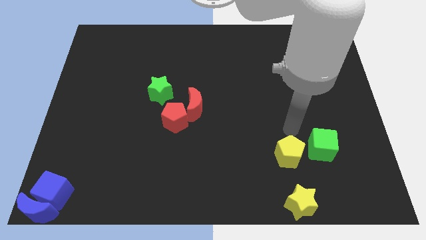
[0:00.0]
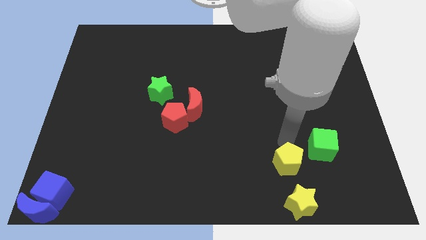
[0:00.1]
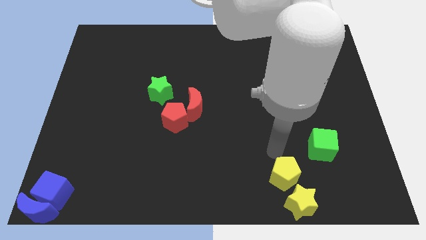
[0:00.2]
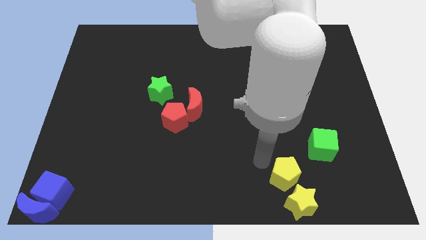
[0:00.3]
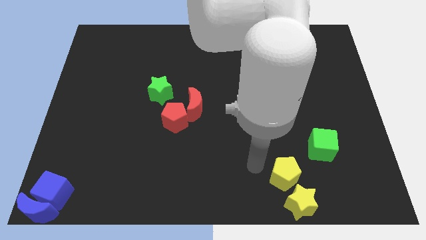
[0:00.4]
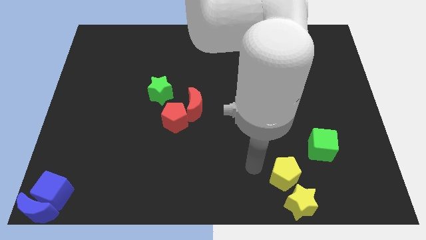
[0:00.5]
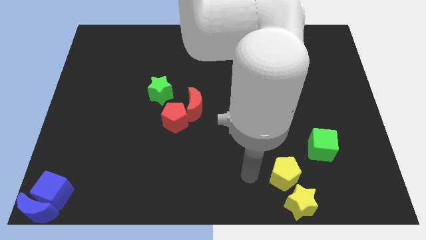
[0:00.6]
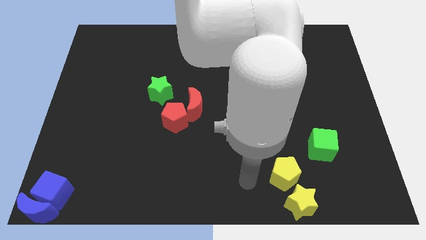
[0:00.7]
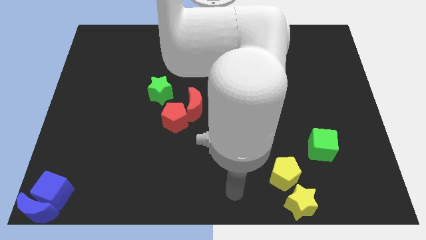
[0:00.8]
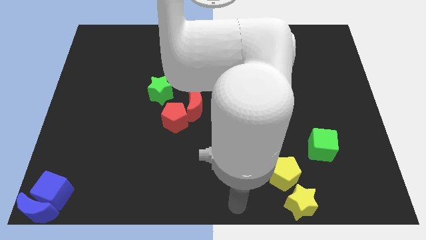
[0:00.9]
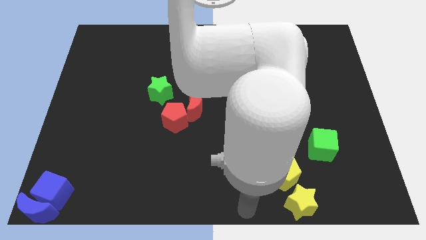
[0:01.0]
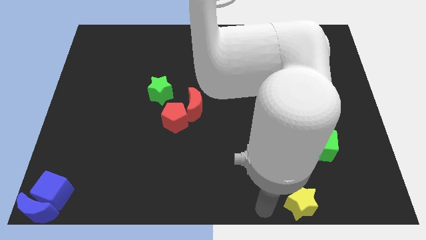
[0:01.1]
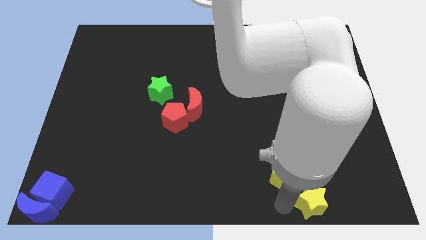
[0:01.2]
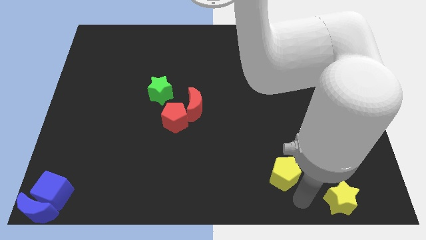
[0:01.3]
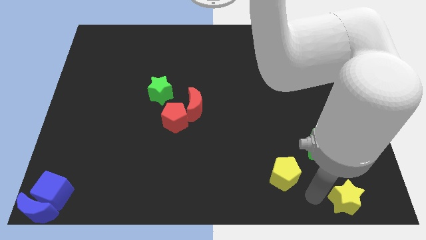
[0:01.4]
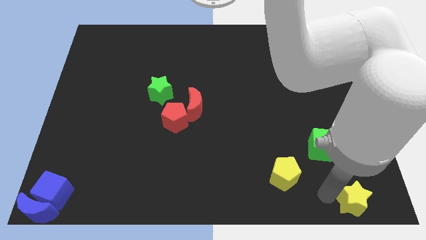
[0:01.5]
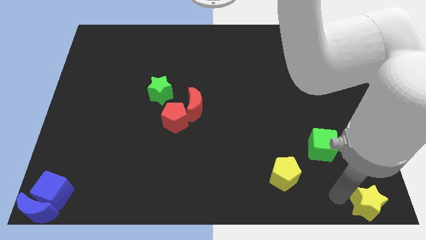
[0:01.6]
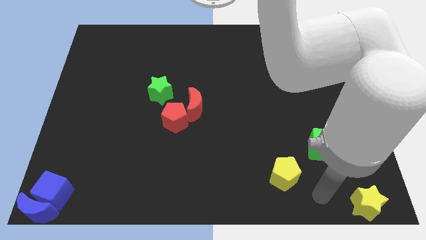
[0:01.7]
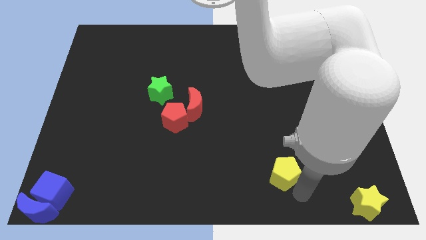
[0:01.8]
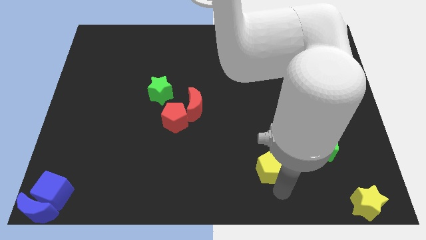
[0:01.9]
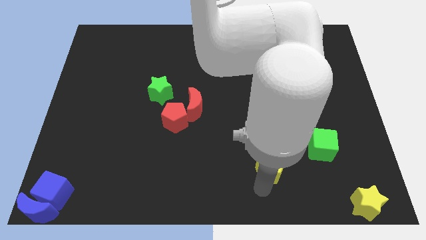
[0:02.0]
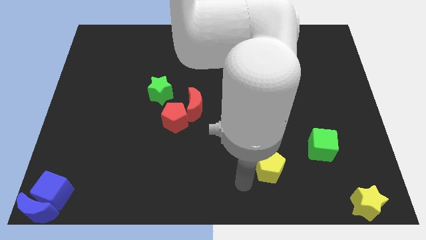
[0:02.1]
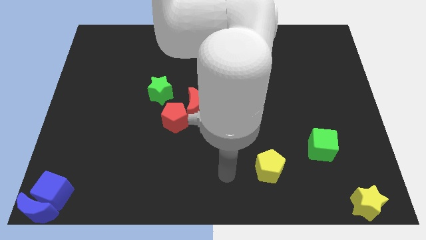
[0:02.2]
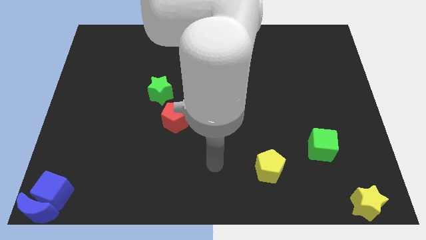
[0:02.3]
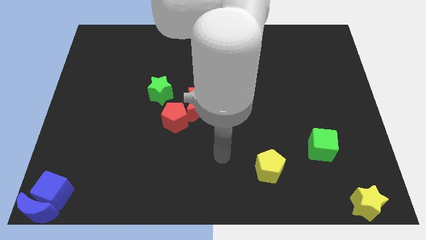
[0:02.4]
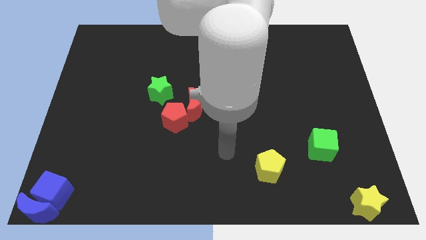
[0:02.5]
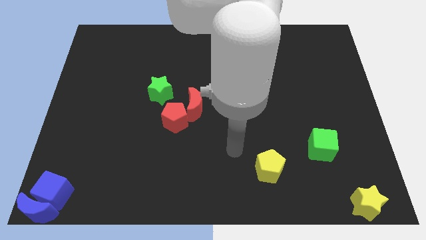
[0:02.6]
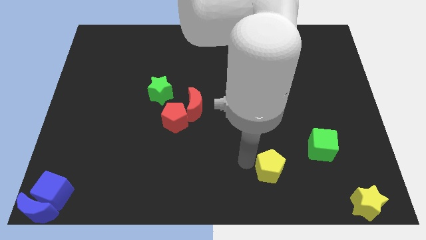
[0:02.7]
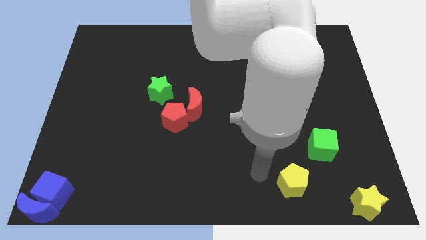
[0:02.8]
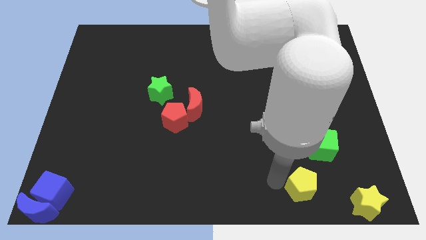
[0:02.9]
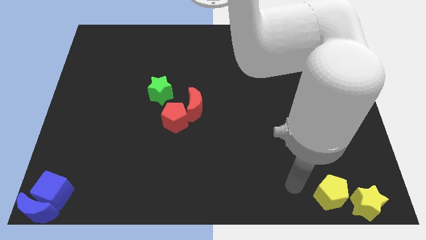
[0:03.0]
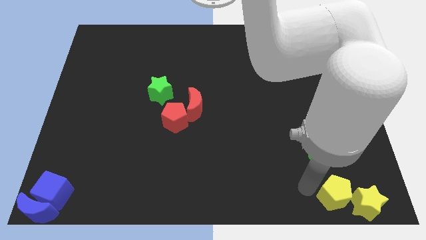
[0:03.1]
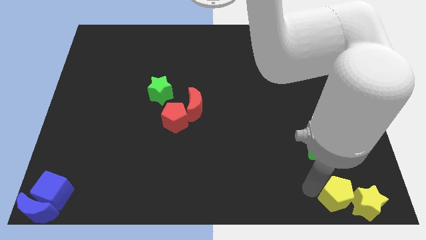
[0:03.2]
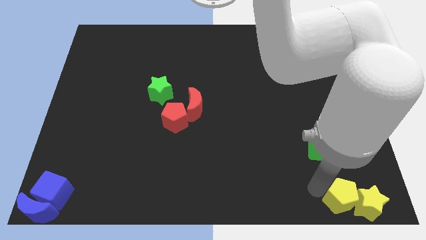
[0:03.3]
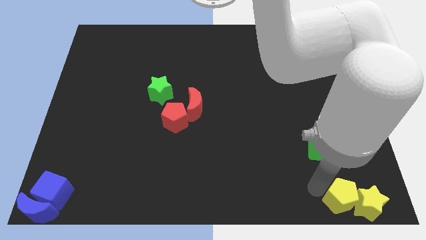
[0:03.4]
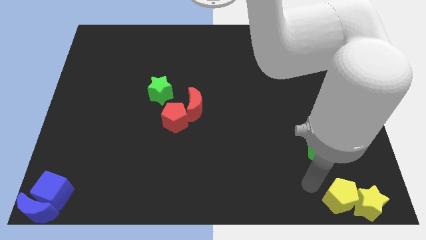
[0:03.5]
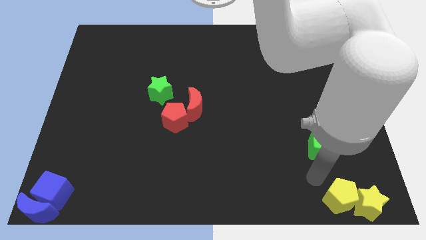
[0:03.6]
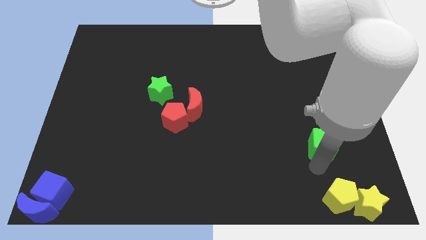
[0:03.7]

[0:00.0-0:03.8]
place the yellow blocks to the bottom right corner of the board

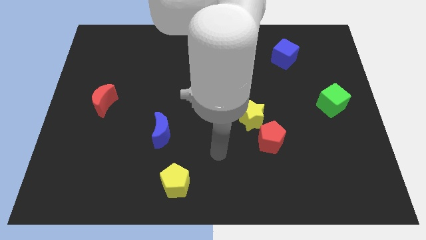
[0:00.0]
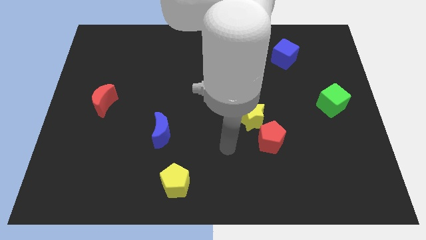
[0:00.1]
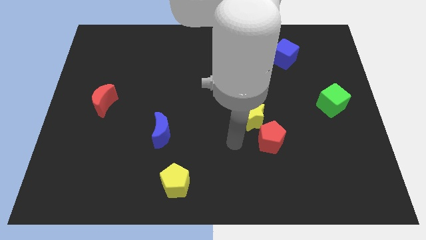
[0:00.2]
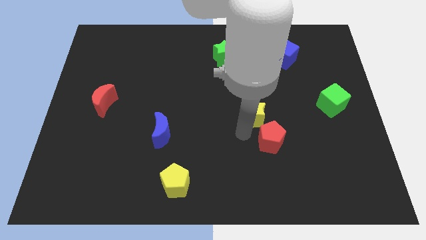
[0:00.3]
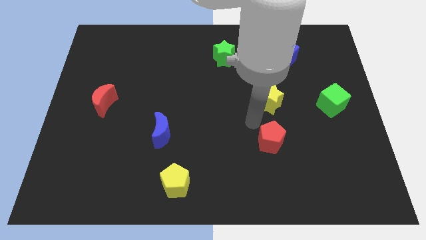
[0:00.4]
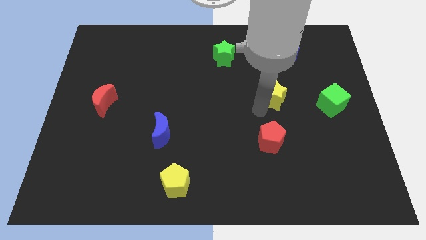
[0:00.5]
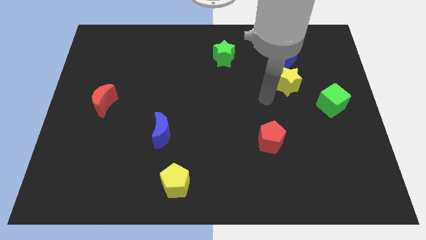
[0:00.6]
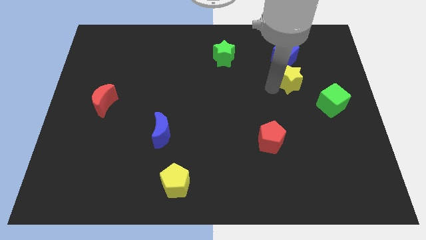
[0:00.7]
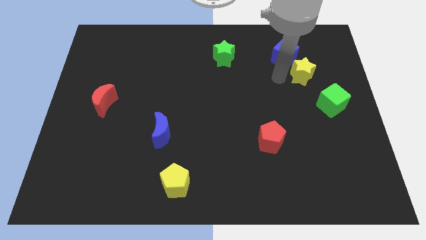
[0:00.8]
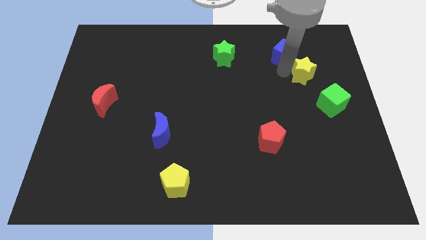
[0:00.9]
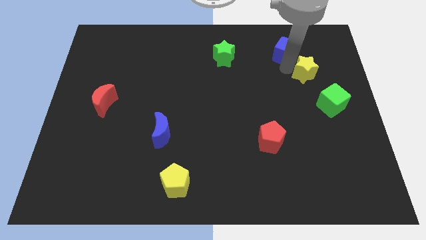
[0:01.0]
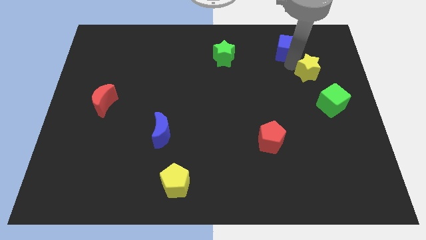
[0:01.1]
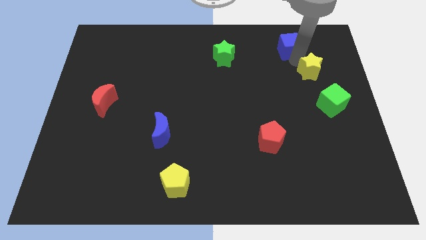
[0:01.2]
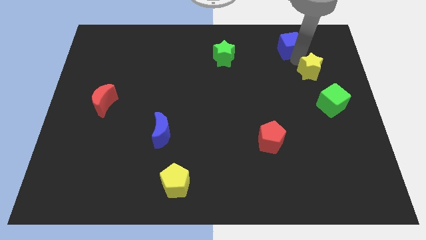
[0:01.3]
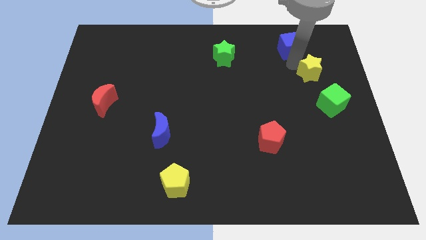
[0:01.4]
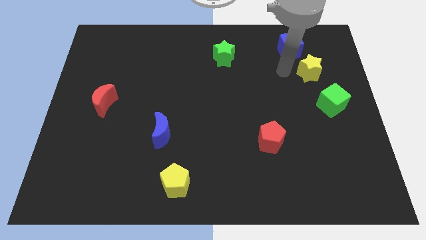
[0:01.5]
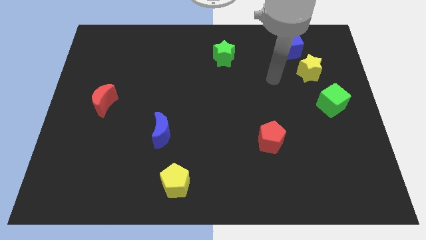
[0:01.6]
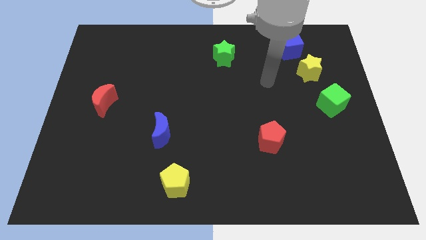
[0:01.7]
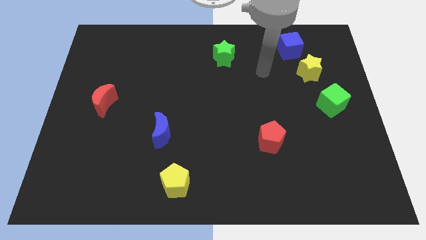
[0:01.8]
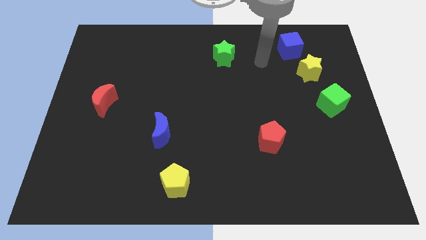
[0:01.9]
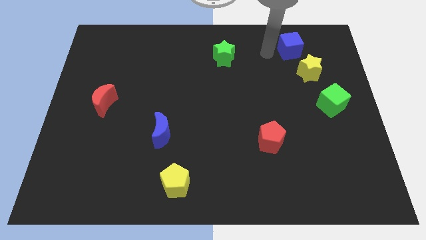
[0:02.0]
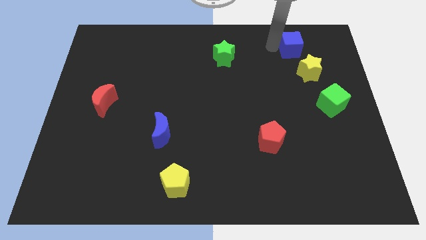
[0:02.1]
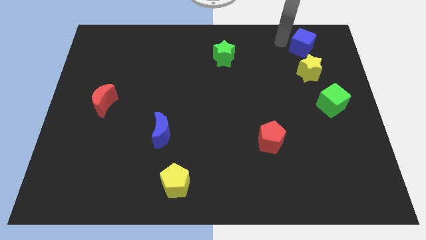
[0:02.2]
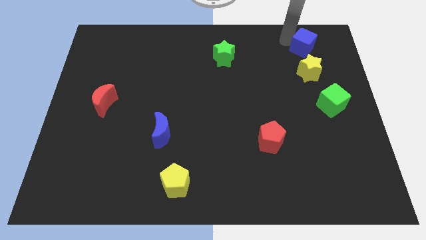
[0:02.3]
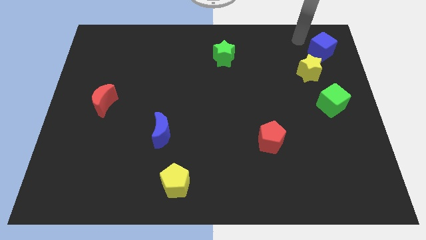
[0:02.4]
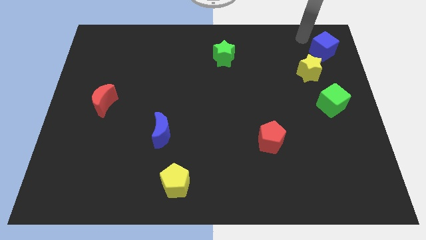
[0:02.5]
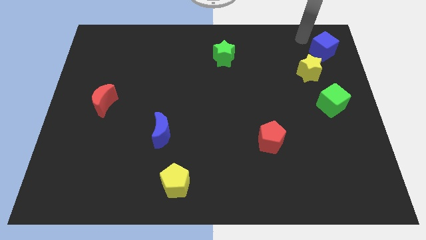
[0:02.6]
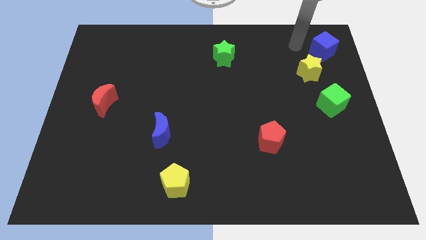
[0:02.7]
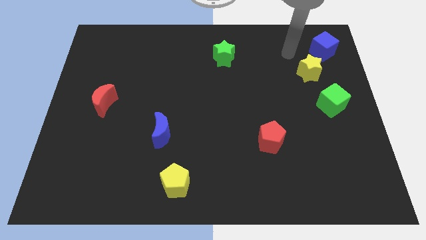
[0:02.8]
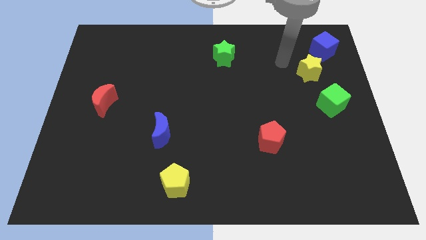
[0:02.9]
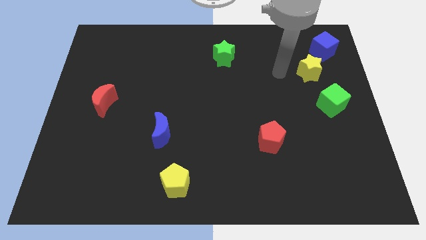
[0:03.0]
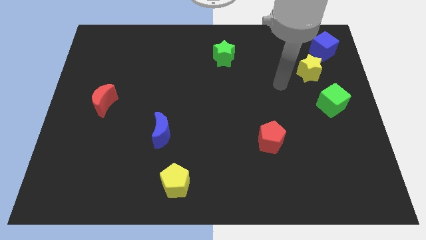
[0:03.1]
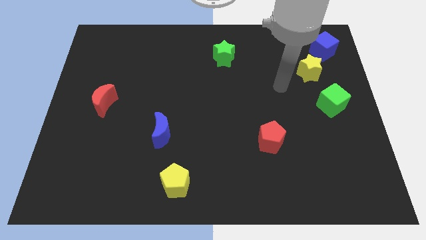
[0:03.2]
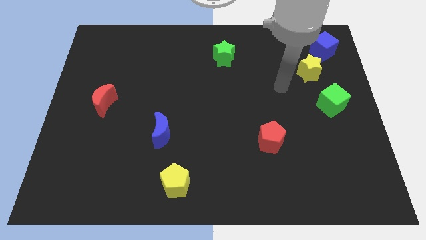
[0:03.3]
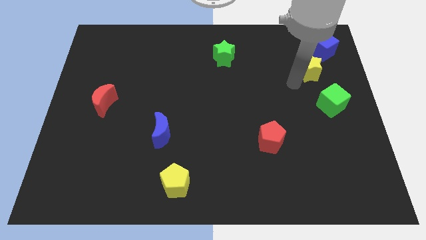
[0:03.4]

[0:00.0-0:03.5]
place the blue cube and the yellow star together at the top side of the green cube

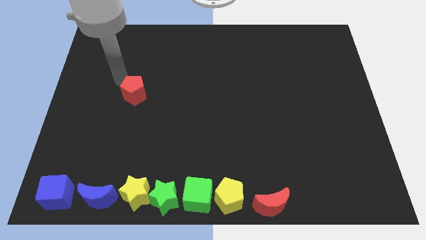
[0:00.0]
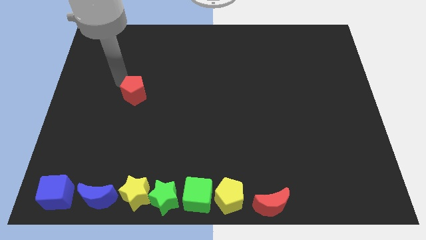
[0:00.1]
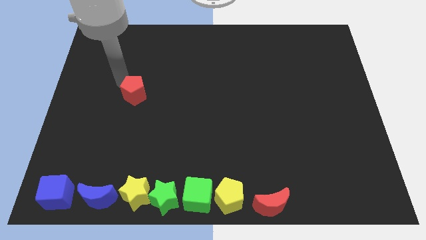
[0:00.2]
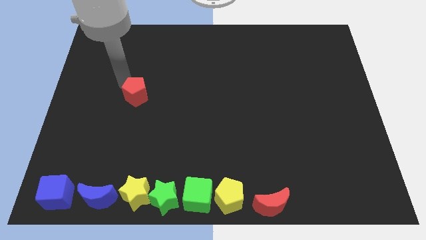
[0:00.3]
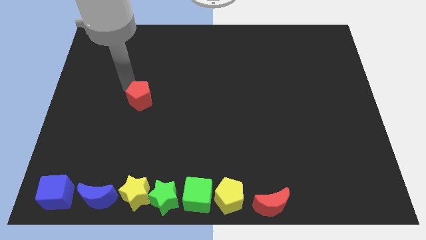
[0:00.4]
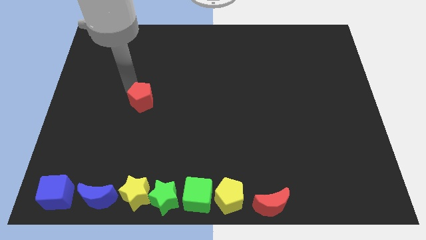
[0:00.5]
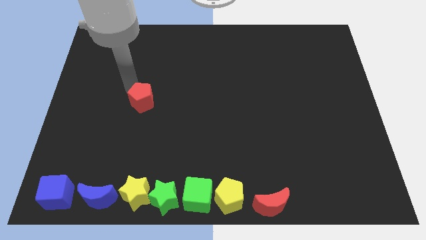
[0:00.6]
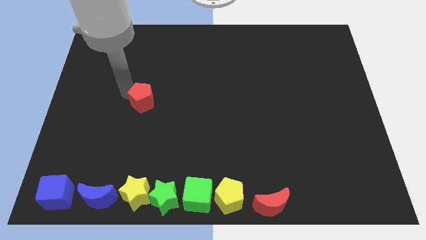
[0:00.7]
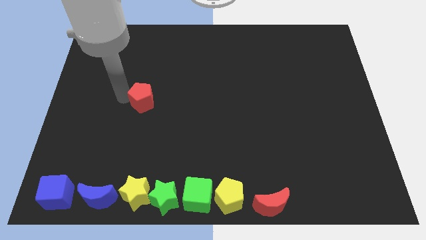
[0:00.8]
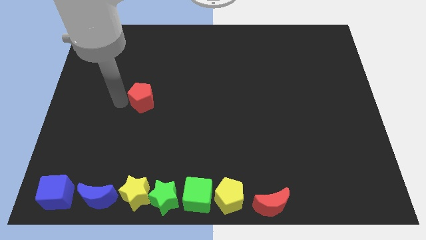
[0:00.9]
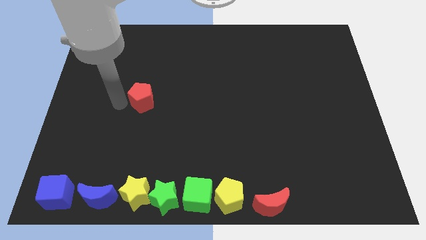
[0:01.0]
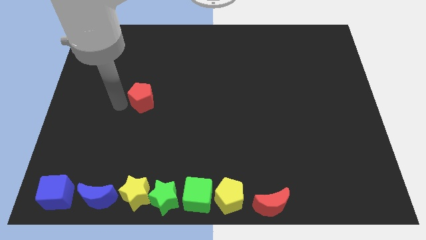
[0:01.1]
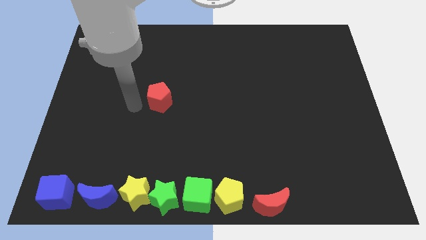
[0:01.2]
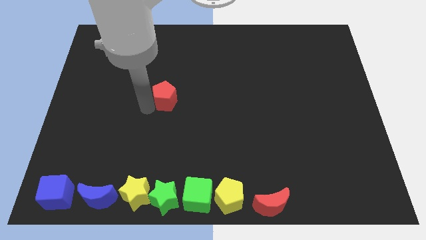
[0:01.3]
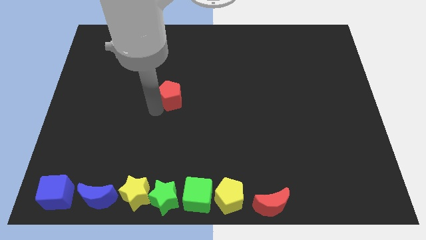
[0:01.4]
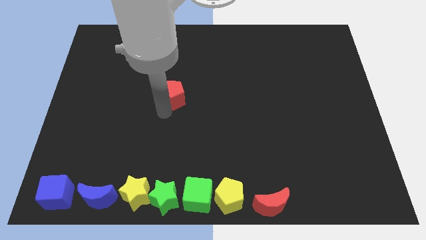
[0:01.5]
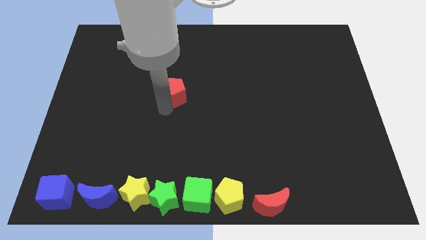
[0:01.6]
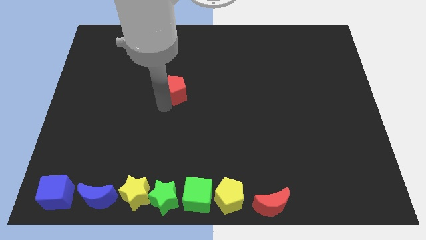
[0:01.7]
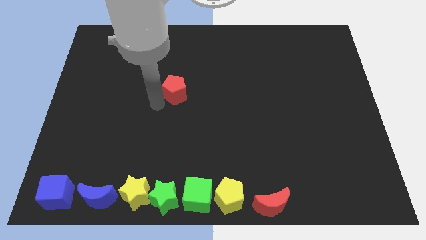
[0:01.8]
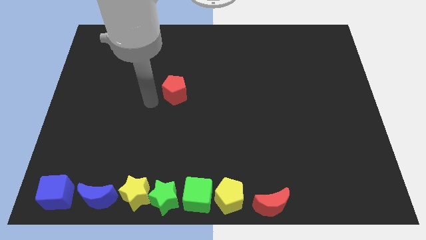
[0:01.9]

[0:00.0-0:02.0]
move red pentagon above green star
